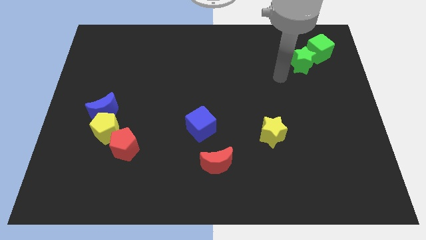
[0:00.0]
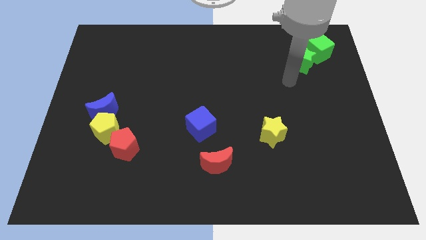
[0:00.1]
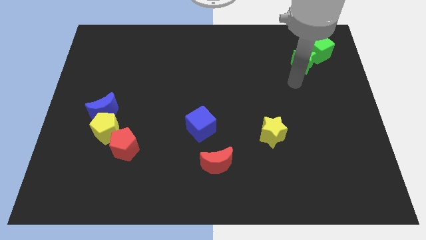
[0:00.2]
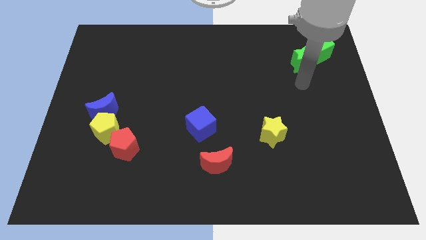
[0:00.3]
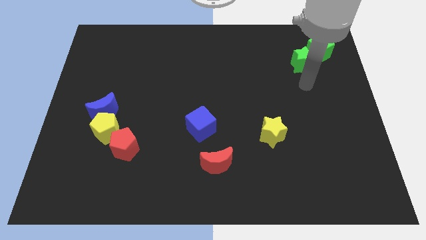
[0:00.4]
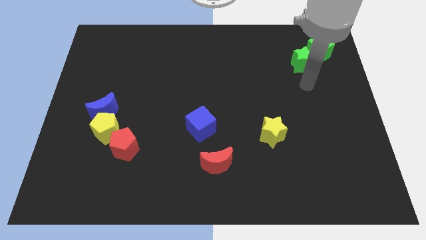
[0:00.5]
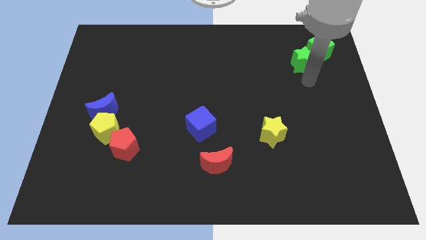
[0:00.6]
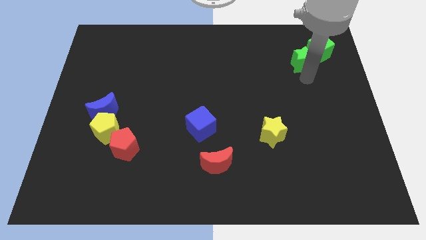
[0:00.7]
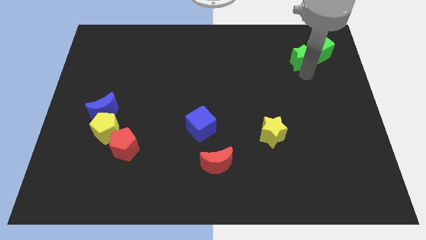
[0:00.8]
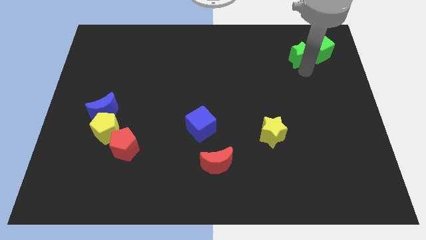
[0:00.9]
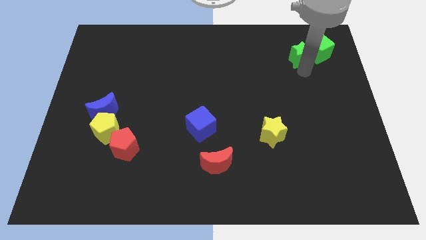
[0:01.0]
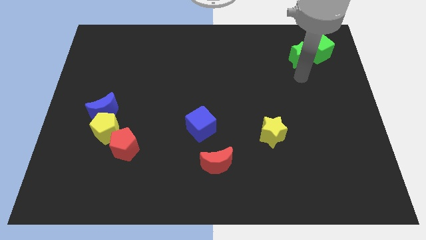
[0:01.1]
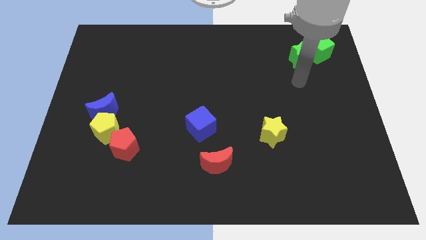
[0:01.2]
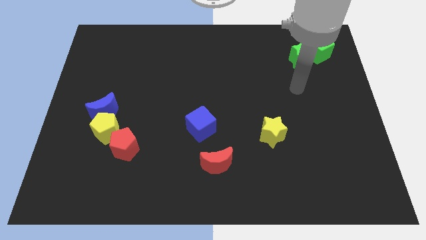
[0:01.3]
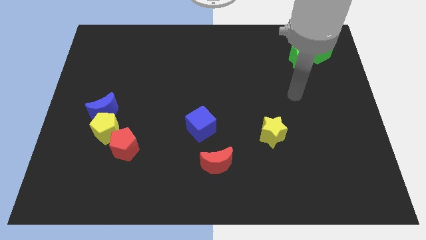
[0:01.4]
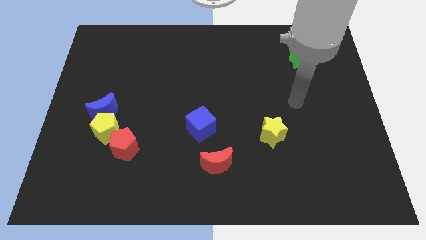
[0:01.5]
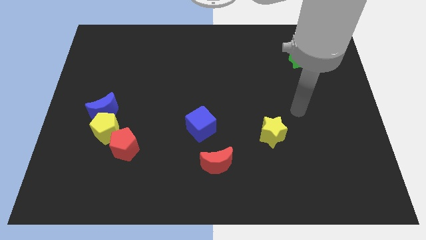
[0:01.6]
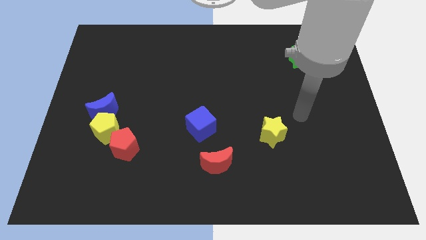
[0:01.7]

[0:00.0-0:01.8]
slightly push the green star towards the top of the board

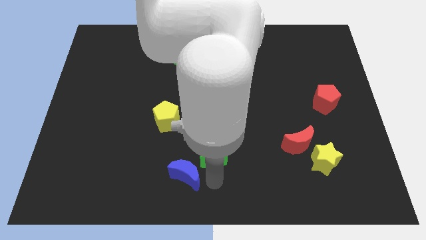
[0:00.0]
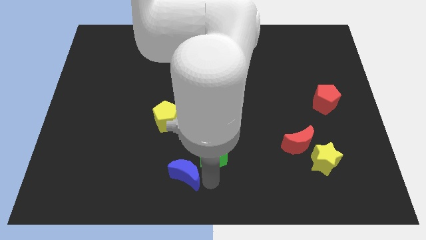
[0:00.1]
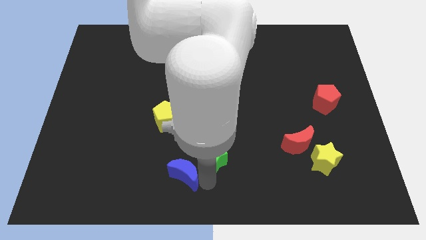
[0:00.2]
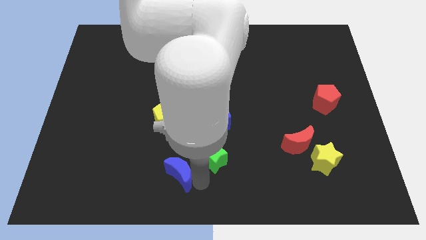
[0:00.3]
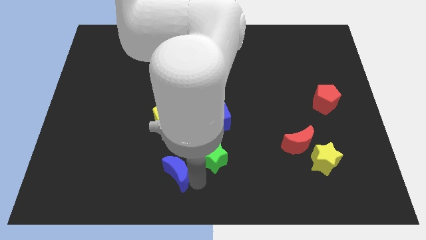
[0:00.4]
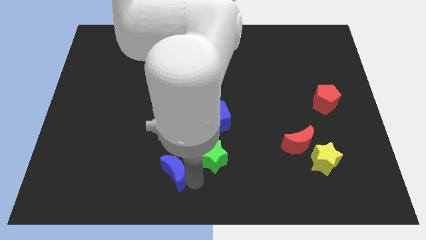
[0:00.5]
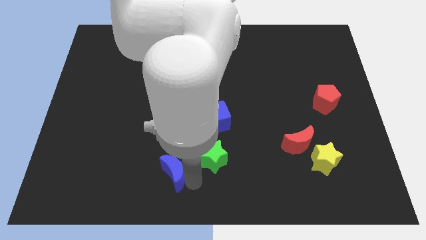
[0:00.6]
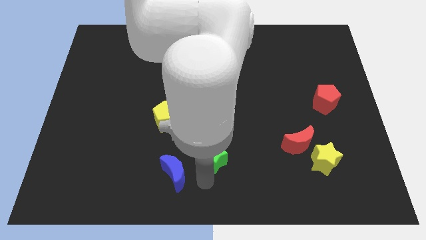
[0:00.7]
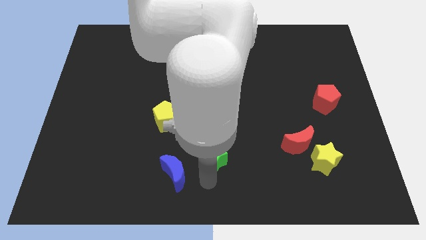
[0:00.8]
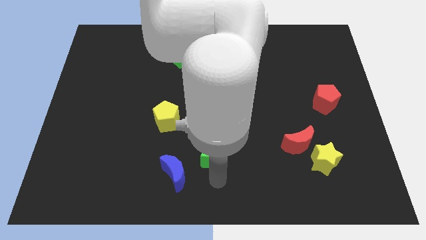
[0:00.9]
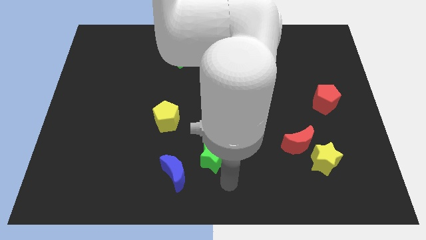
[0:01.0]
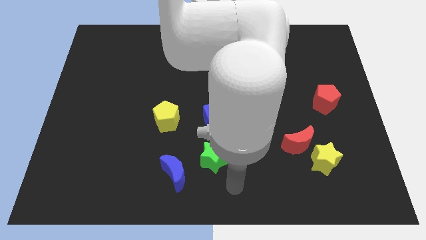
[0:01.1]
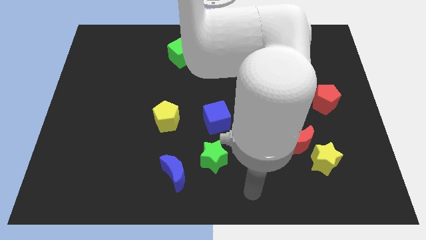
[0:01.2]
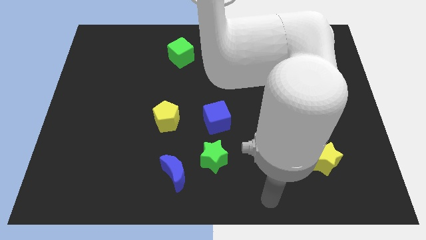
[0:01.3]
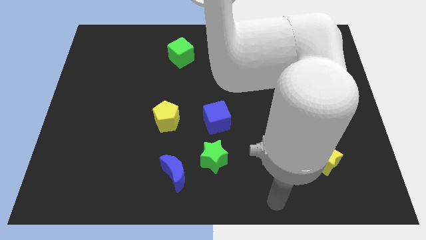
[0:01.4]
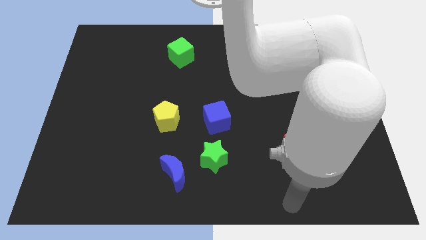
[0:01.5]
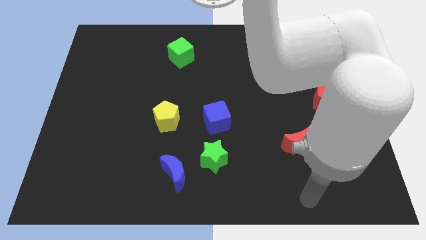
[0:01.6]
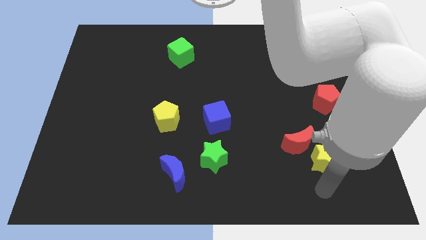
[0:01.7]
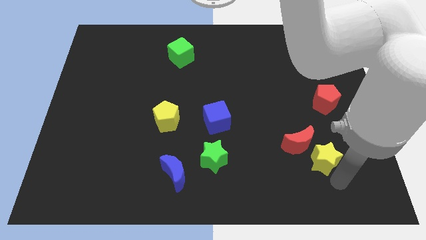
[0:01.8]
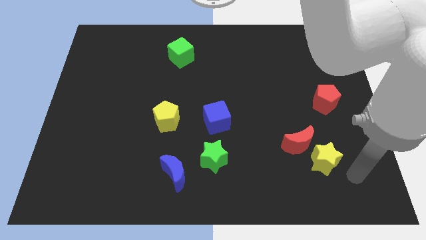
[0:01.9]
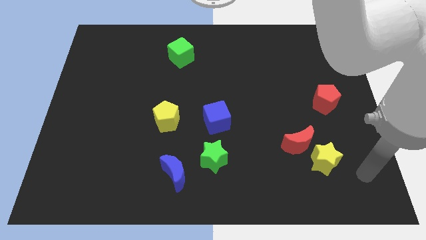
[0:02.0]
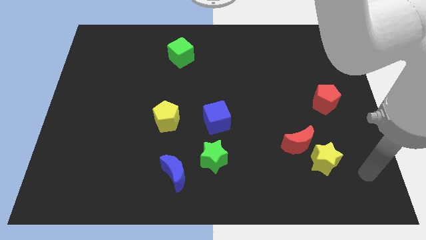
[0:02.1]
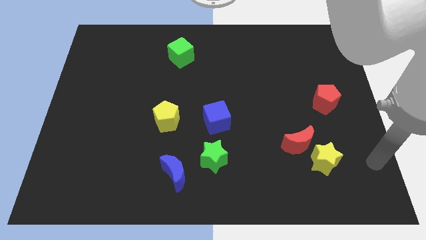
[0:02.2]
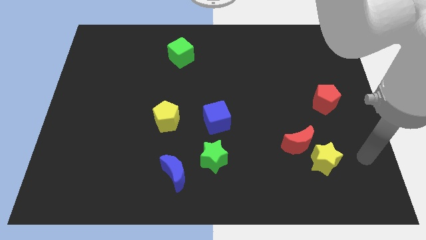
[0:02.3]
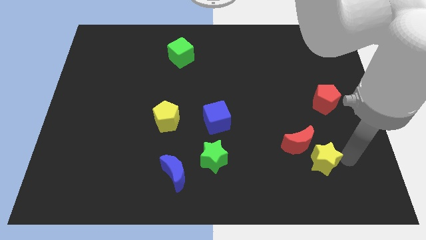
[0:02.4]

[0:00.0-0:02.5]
move your arm to the right side of the yellow star

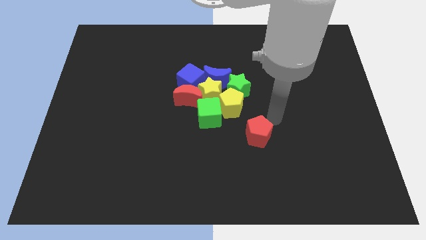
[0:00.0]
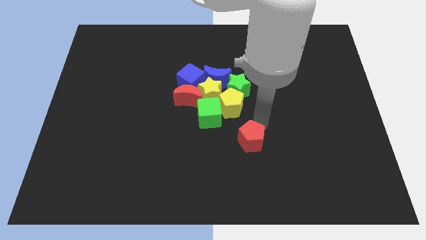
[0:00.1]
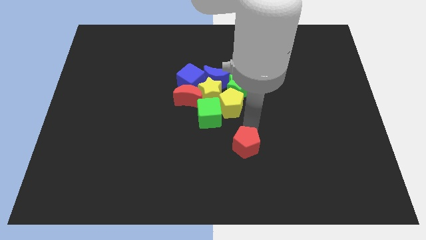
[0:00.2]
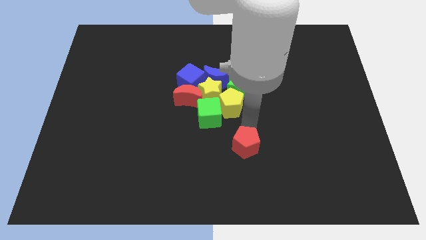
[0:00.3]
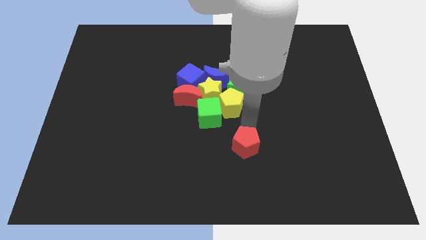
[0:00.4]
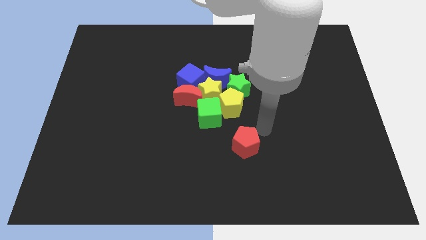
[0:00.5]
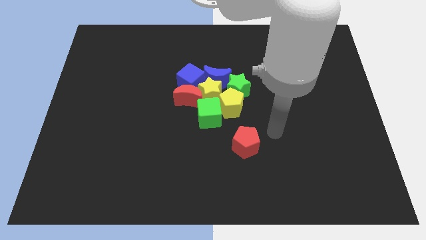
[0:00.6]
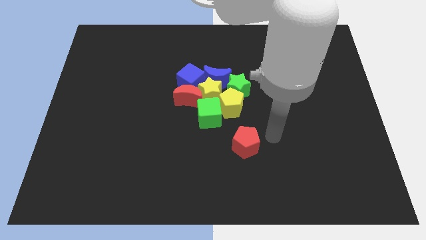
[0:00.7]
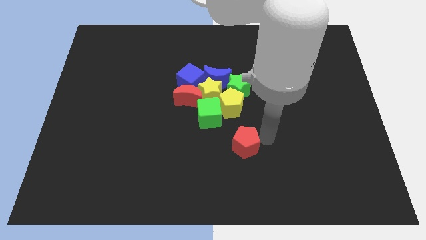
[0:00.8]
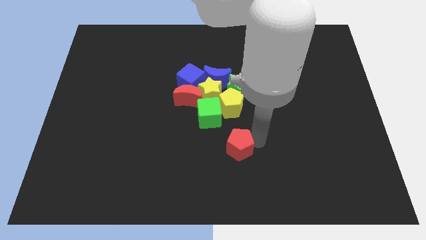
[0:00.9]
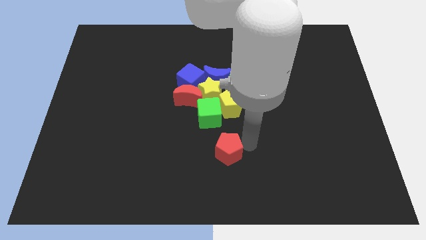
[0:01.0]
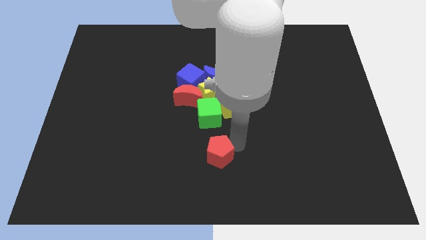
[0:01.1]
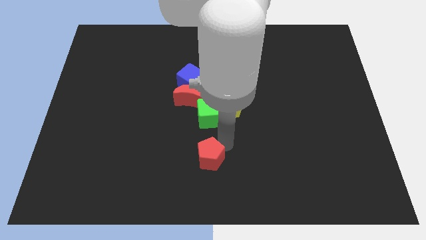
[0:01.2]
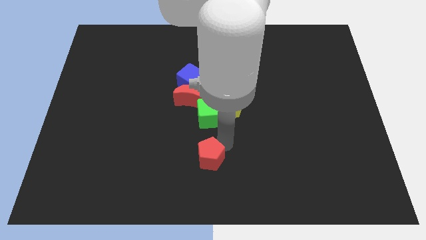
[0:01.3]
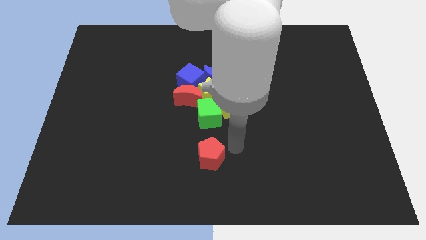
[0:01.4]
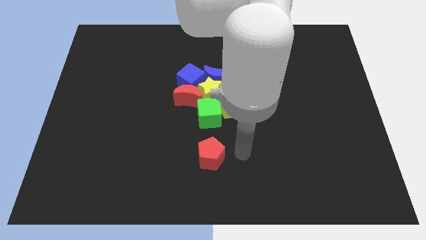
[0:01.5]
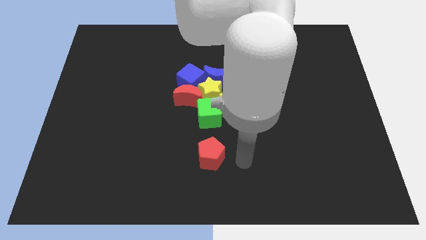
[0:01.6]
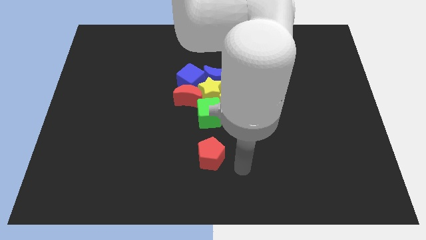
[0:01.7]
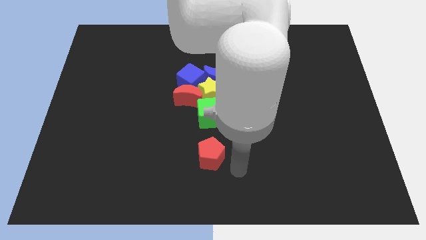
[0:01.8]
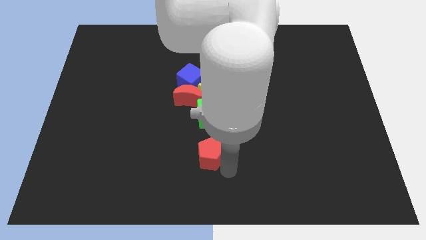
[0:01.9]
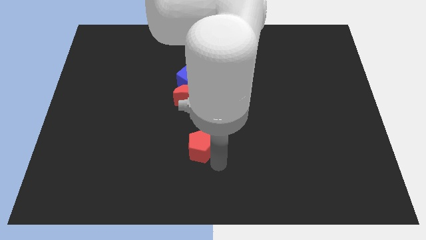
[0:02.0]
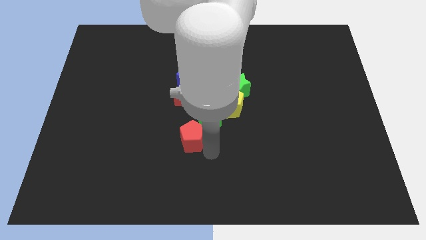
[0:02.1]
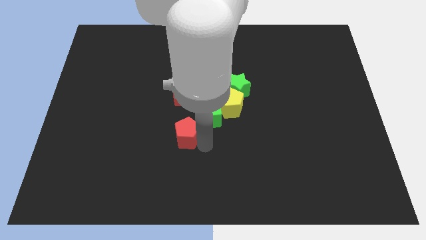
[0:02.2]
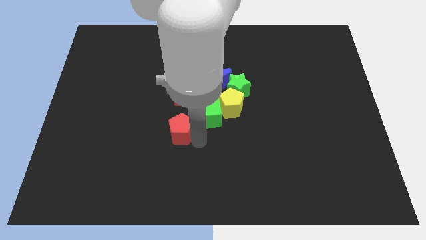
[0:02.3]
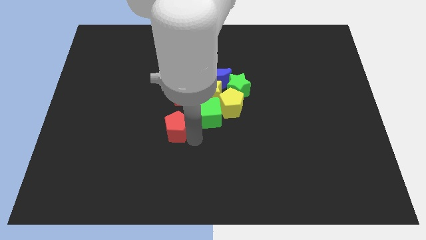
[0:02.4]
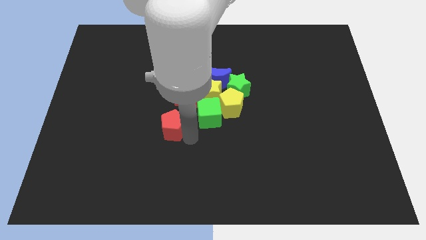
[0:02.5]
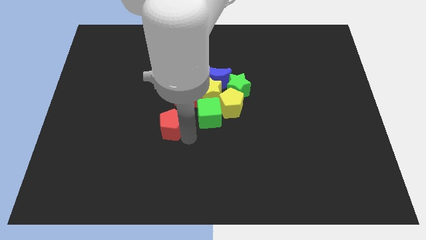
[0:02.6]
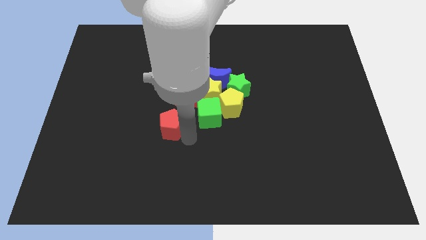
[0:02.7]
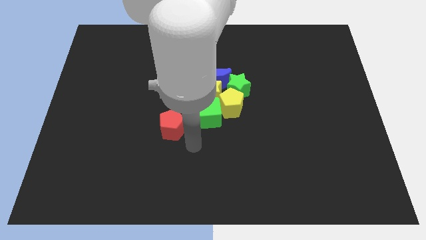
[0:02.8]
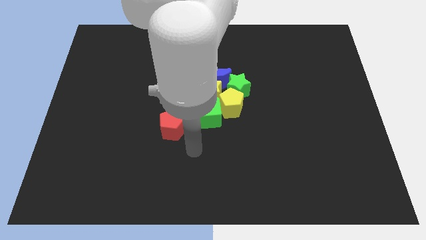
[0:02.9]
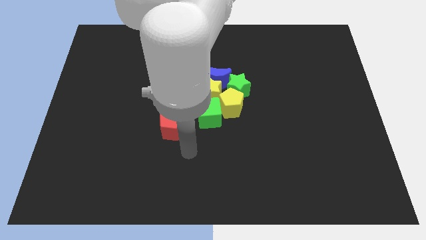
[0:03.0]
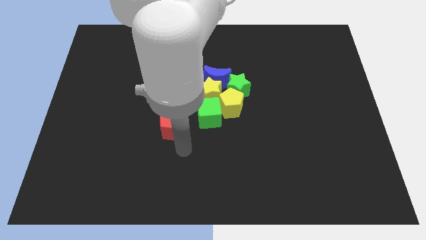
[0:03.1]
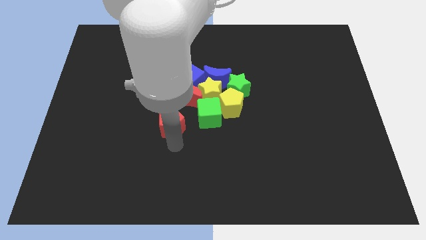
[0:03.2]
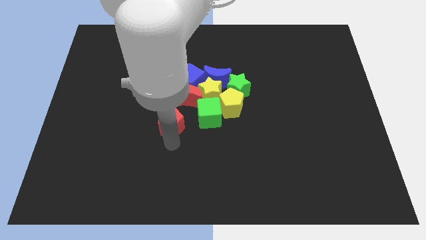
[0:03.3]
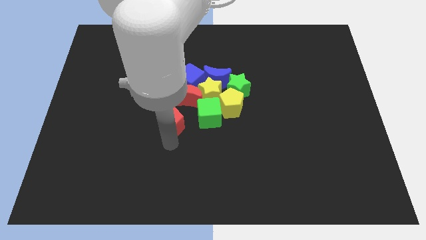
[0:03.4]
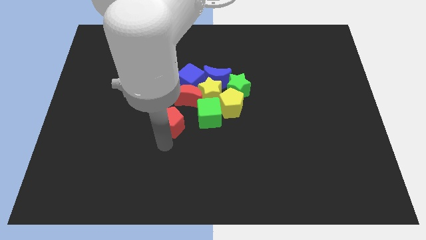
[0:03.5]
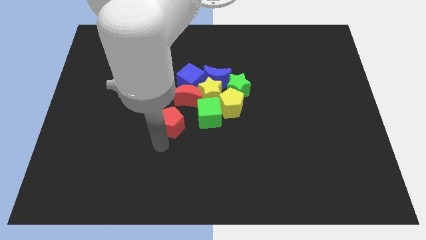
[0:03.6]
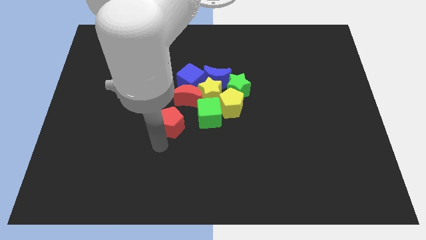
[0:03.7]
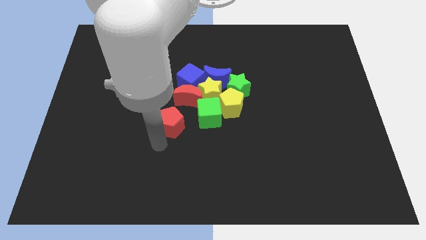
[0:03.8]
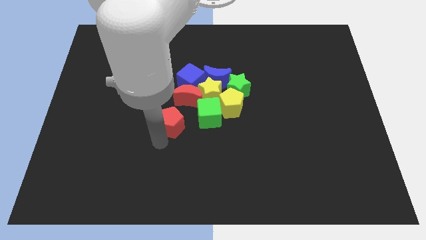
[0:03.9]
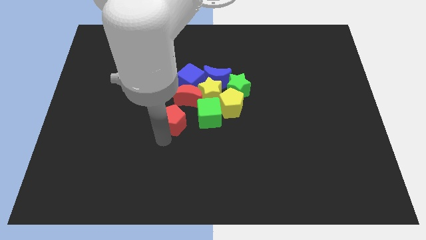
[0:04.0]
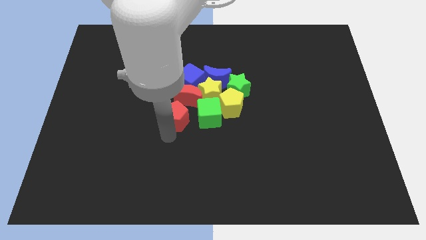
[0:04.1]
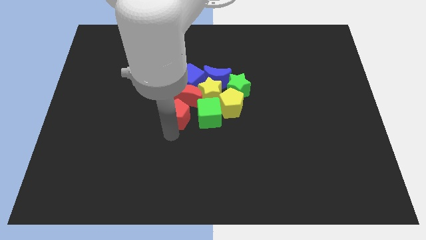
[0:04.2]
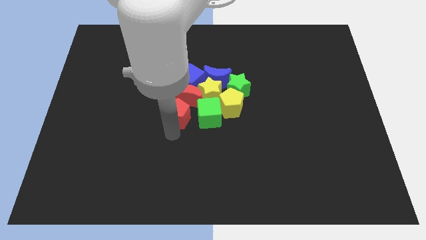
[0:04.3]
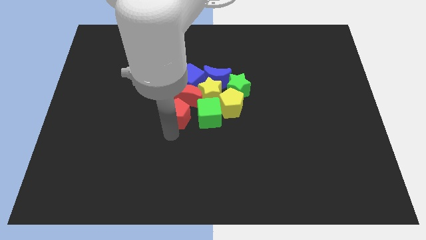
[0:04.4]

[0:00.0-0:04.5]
move the red pentagon to the left side of the green cube
